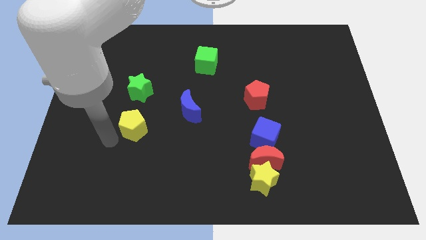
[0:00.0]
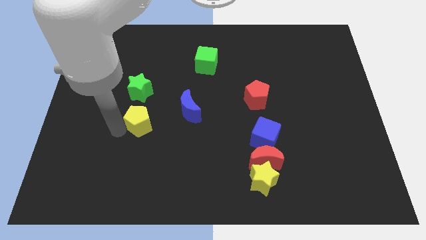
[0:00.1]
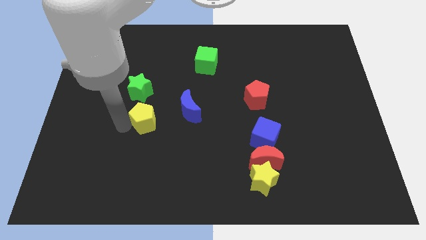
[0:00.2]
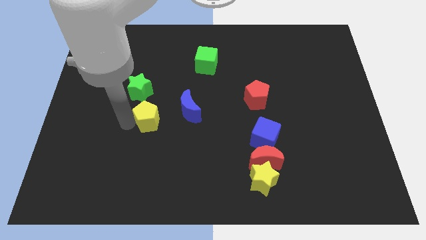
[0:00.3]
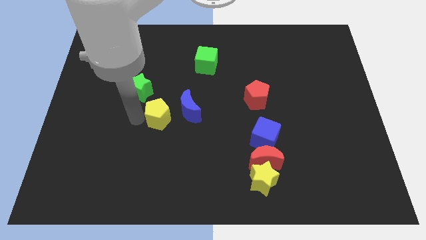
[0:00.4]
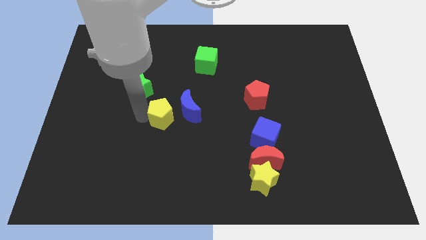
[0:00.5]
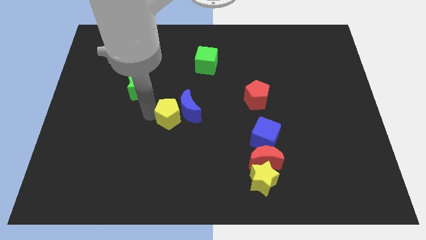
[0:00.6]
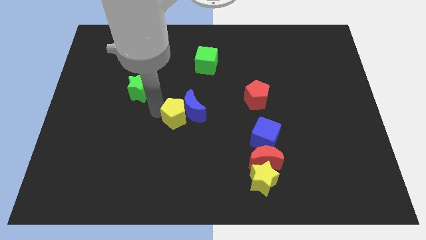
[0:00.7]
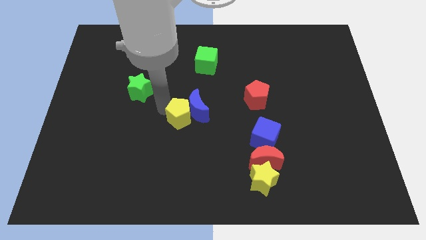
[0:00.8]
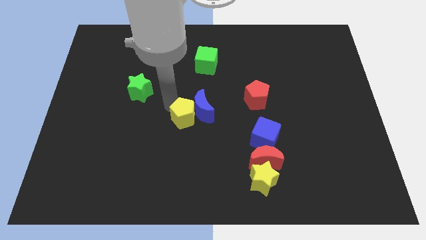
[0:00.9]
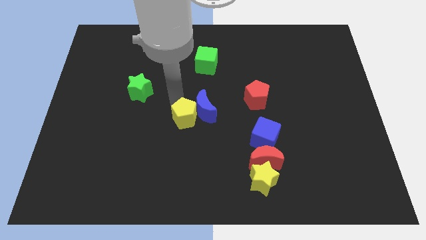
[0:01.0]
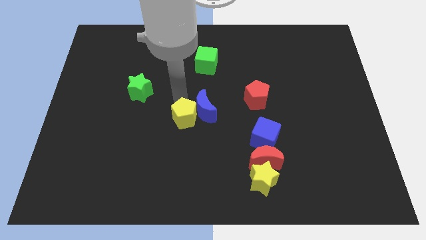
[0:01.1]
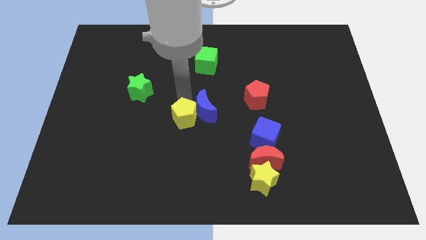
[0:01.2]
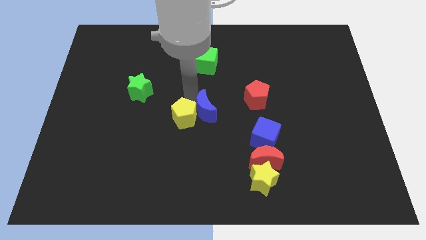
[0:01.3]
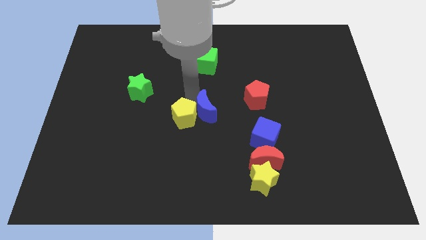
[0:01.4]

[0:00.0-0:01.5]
push the yellow pentagon into the blue moon

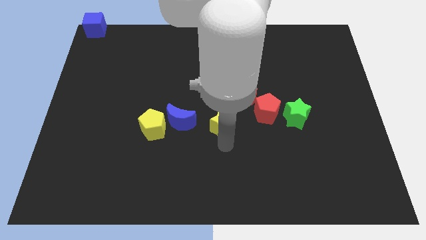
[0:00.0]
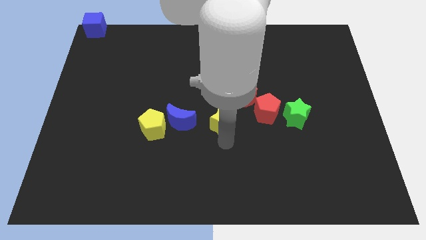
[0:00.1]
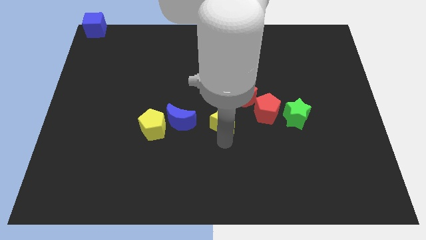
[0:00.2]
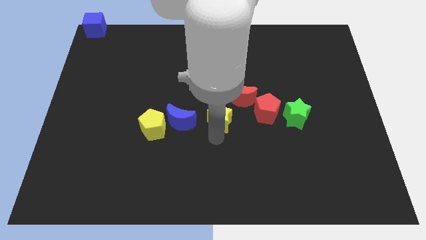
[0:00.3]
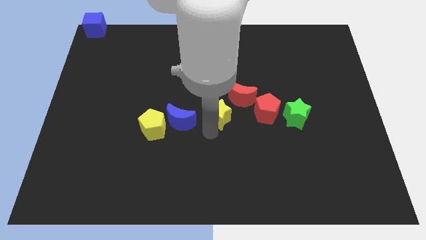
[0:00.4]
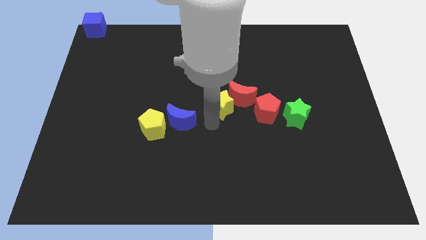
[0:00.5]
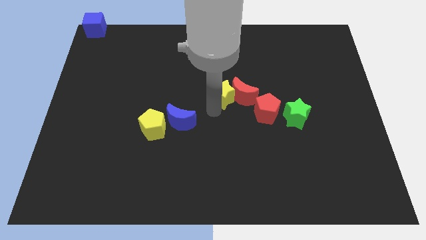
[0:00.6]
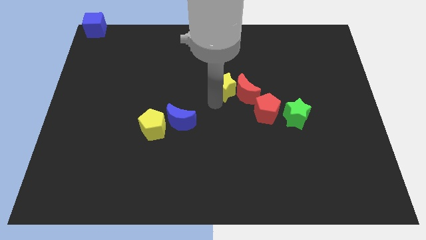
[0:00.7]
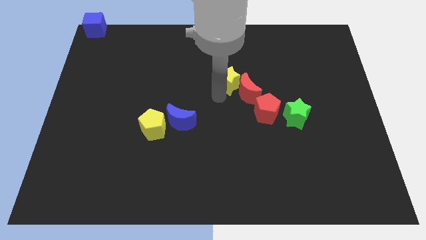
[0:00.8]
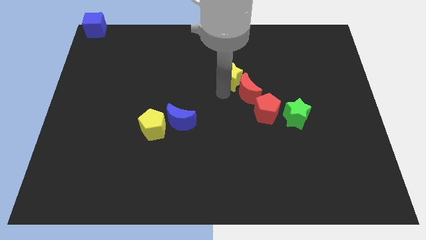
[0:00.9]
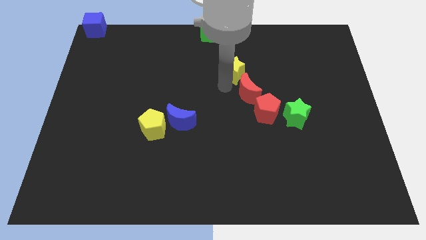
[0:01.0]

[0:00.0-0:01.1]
hit the red moon with the yellow star

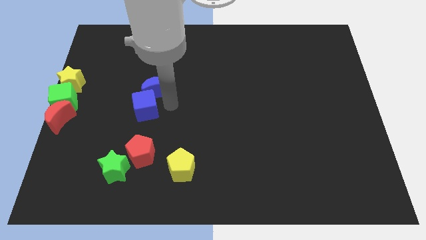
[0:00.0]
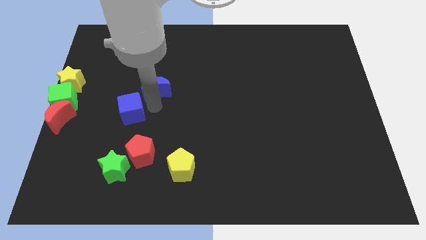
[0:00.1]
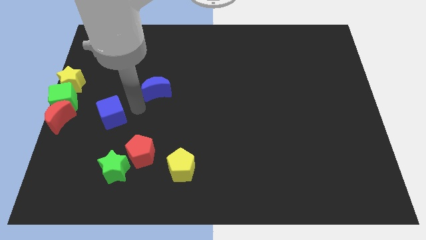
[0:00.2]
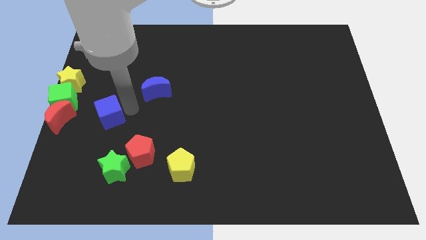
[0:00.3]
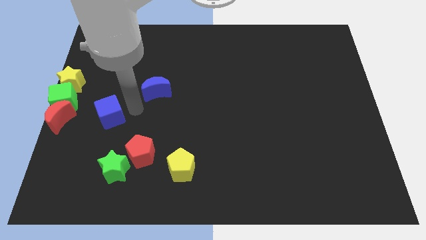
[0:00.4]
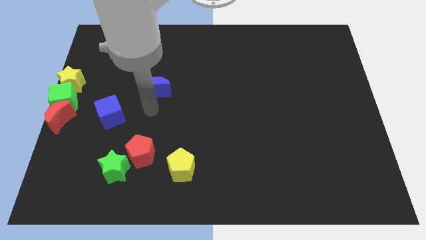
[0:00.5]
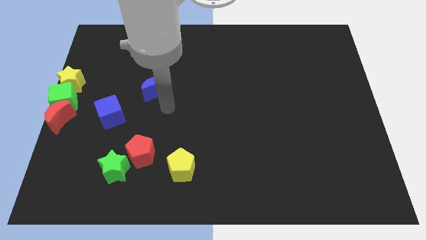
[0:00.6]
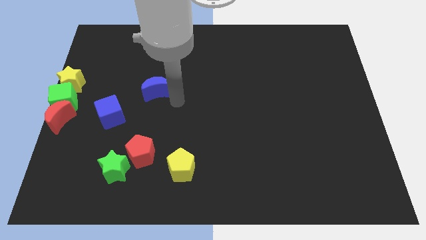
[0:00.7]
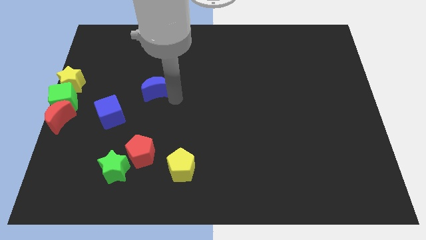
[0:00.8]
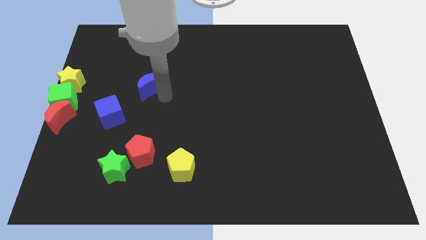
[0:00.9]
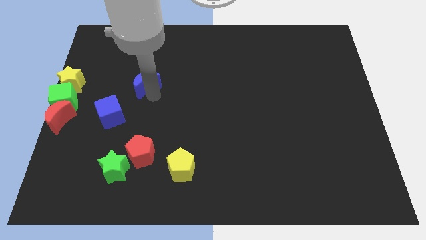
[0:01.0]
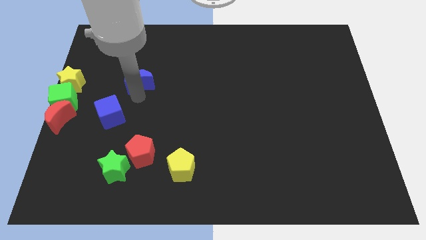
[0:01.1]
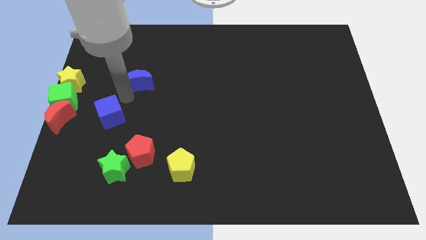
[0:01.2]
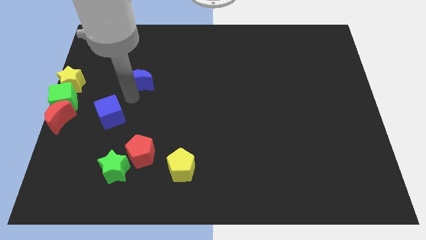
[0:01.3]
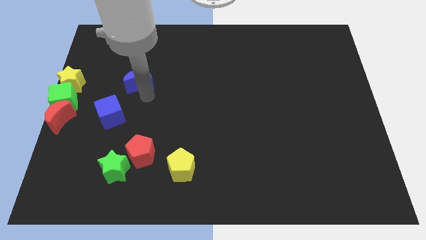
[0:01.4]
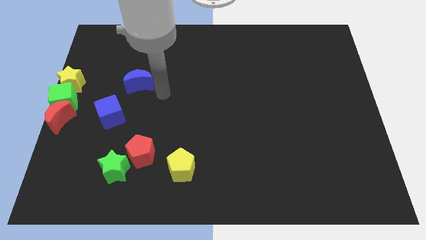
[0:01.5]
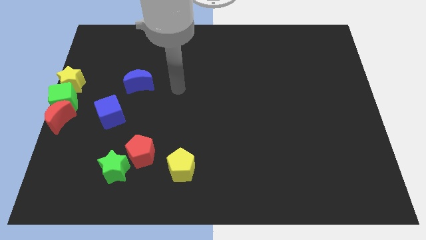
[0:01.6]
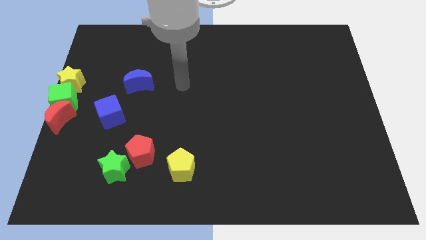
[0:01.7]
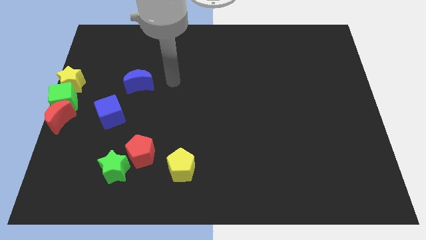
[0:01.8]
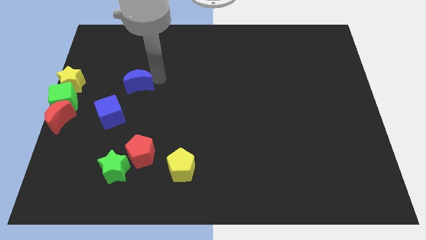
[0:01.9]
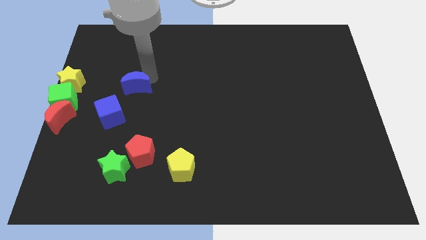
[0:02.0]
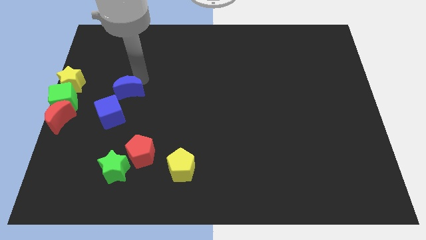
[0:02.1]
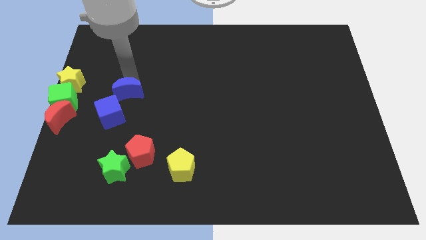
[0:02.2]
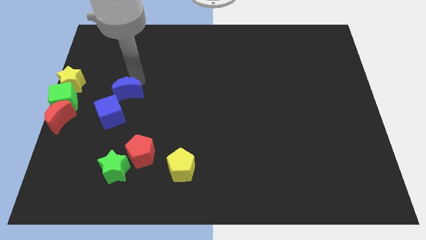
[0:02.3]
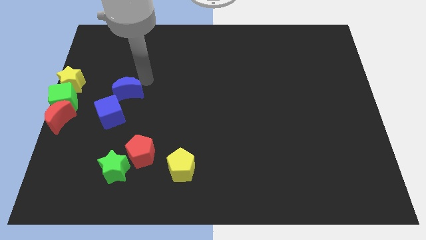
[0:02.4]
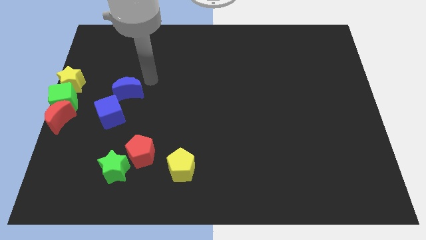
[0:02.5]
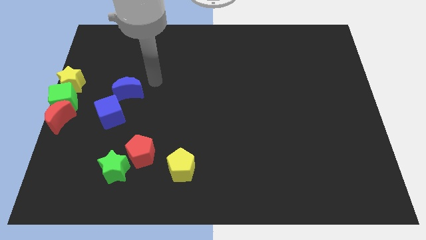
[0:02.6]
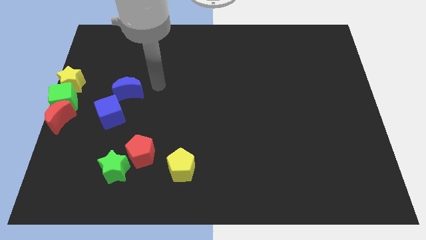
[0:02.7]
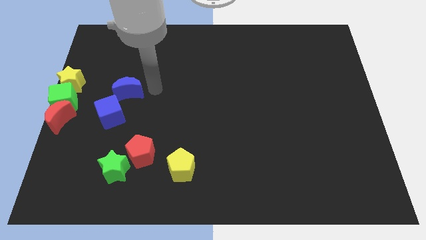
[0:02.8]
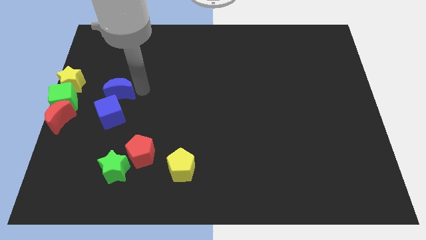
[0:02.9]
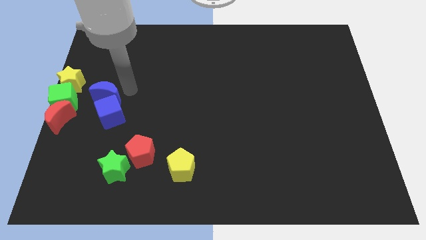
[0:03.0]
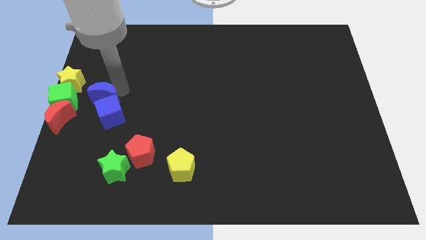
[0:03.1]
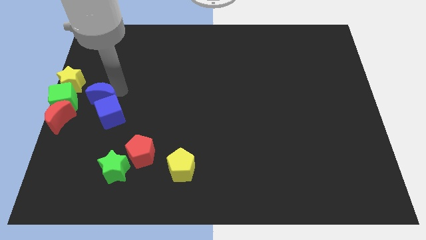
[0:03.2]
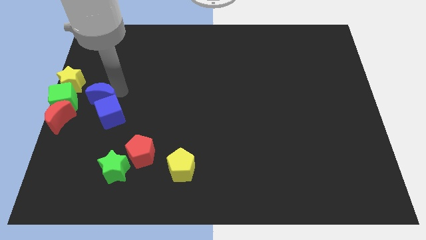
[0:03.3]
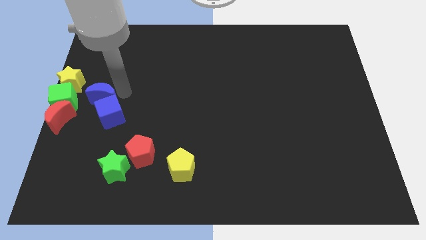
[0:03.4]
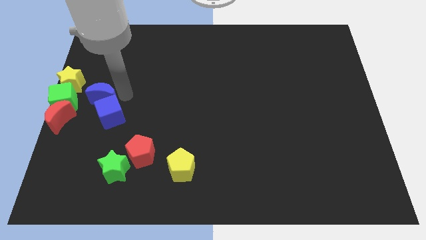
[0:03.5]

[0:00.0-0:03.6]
place the blue blocks at the right to the green cube

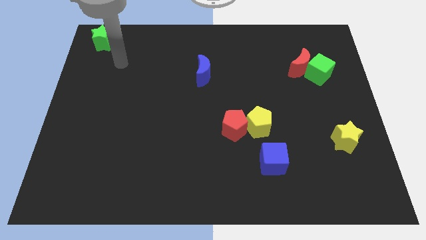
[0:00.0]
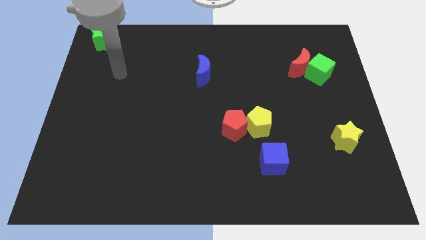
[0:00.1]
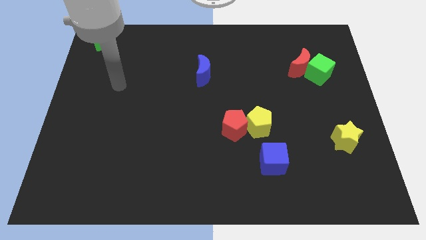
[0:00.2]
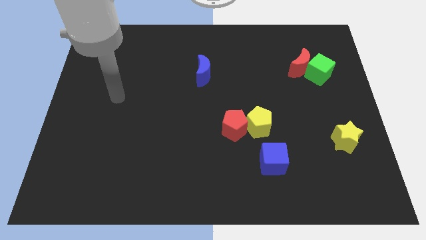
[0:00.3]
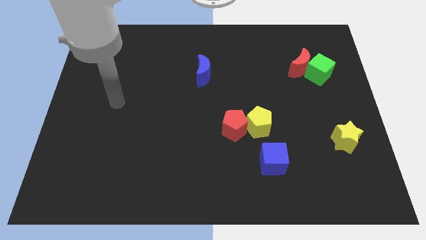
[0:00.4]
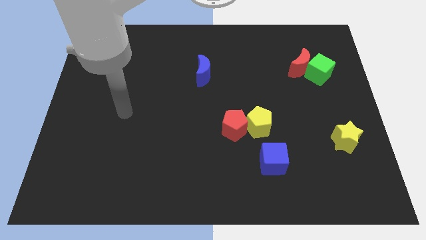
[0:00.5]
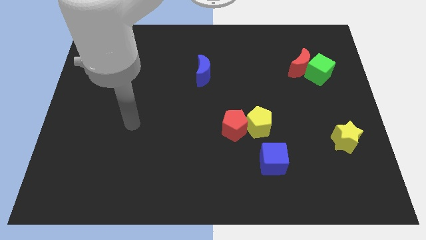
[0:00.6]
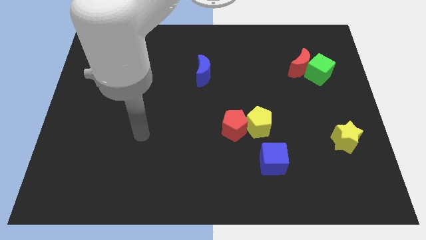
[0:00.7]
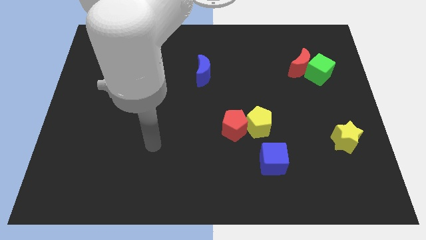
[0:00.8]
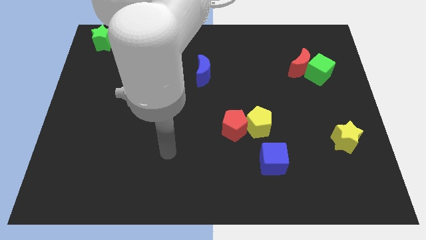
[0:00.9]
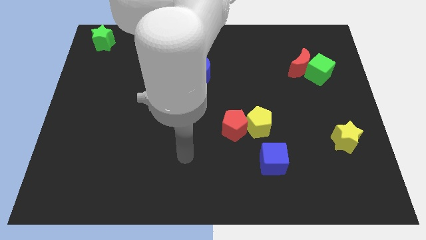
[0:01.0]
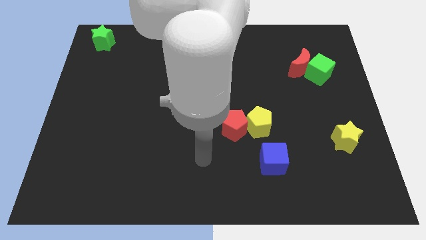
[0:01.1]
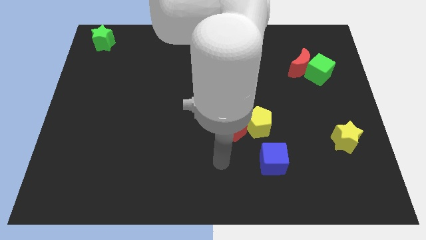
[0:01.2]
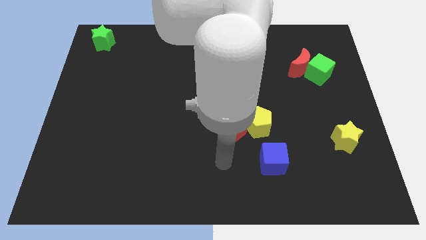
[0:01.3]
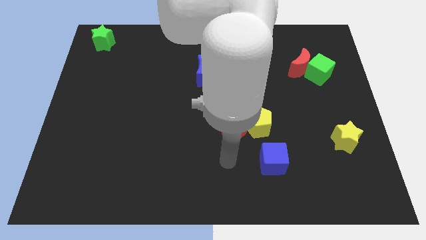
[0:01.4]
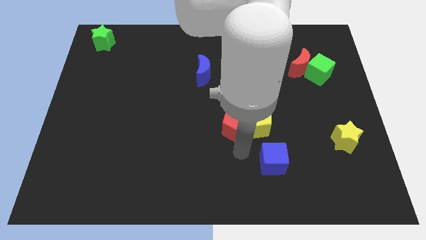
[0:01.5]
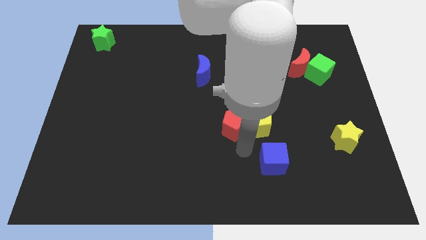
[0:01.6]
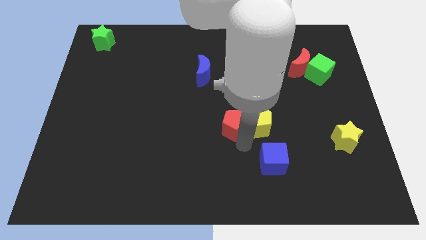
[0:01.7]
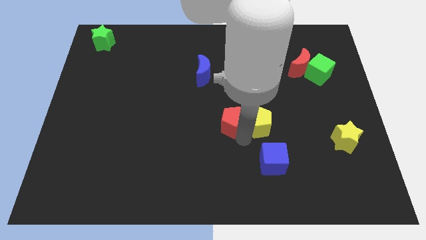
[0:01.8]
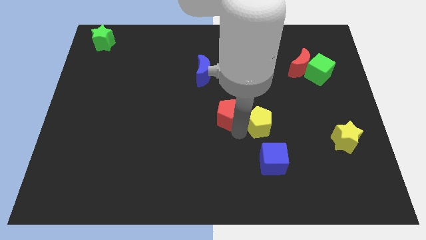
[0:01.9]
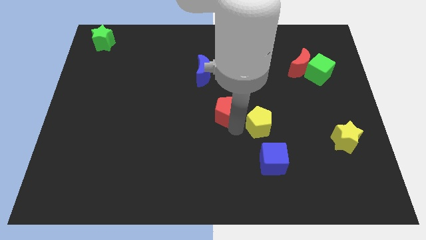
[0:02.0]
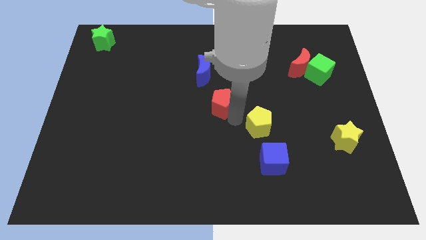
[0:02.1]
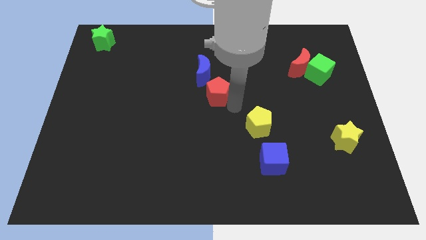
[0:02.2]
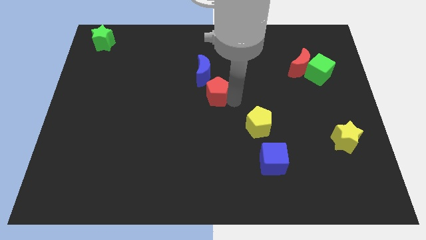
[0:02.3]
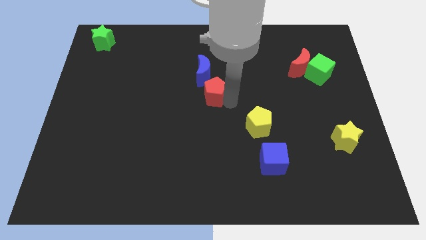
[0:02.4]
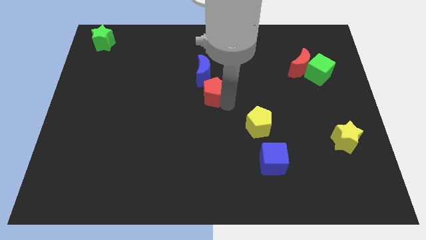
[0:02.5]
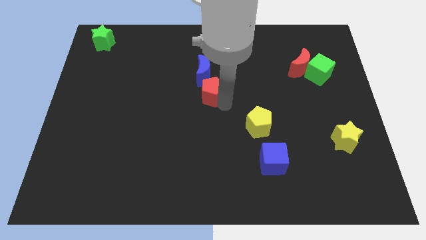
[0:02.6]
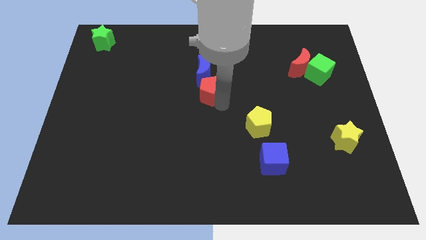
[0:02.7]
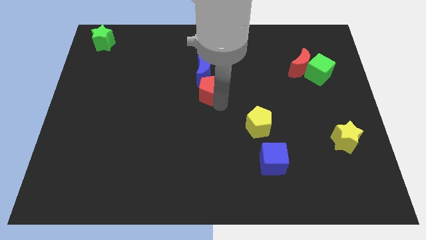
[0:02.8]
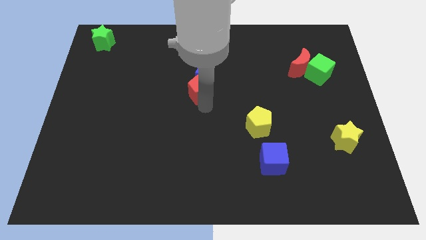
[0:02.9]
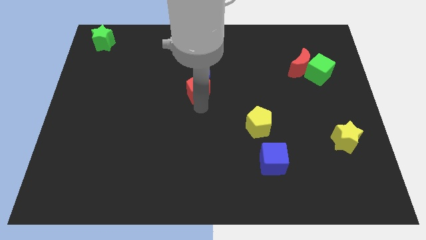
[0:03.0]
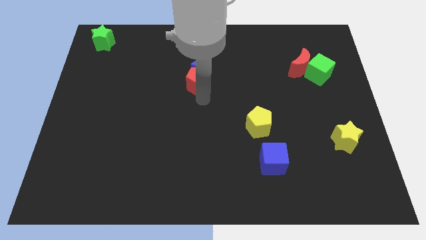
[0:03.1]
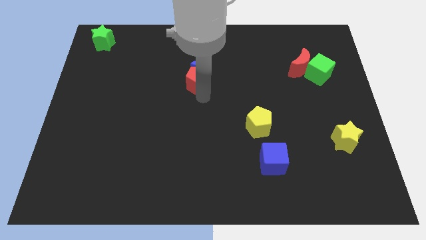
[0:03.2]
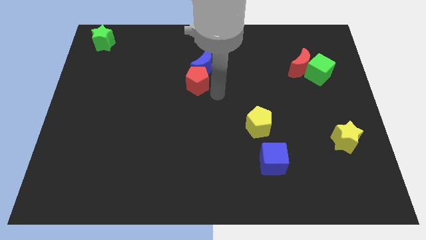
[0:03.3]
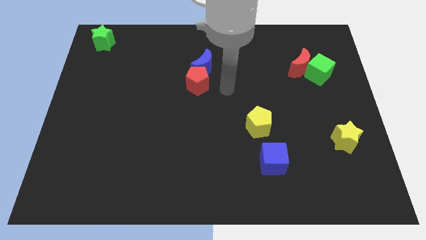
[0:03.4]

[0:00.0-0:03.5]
put the red pentagon at the bottom of the blue crescent
